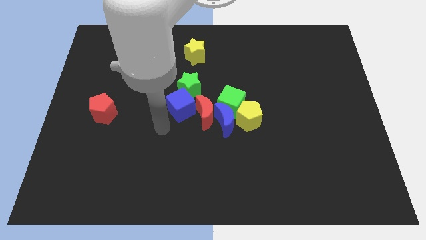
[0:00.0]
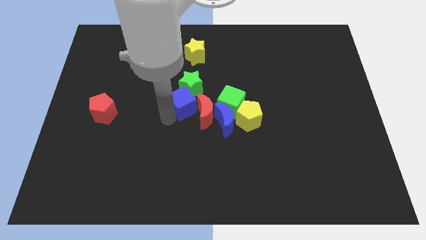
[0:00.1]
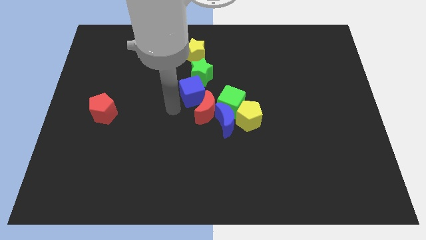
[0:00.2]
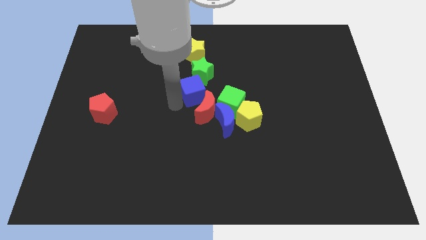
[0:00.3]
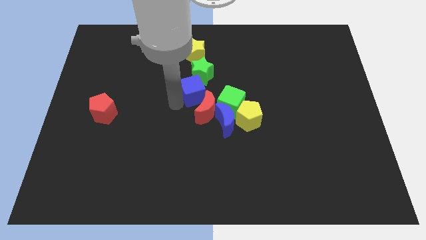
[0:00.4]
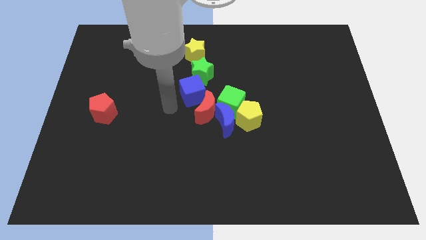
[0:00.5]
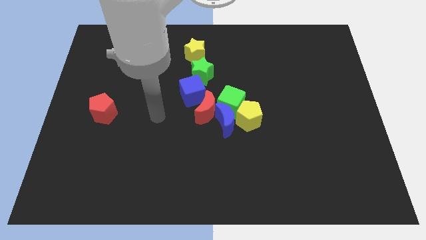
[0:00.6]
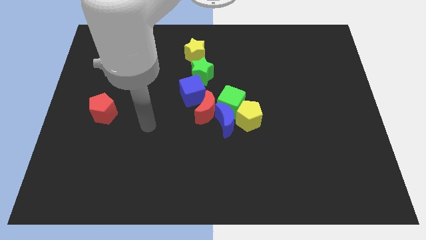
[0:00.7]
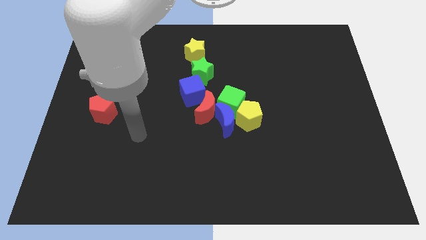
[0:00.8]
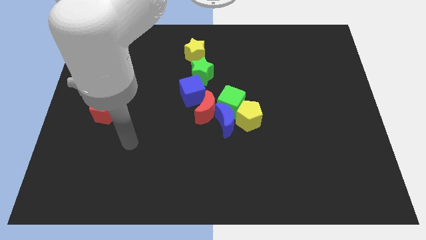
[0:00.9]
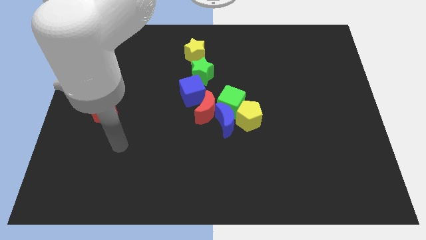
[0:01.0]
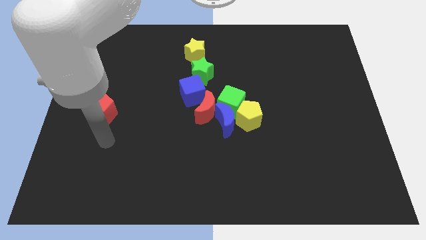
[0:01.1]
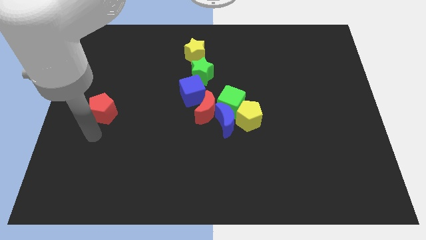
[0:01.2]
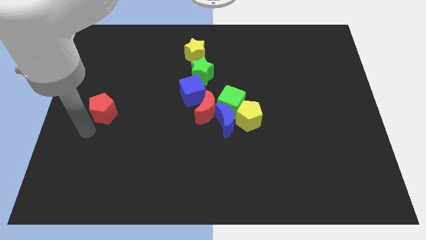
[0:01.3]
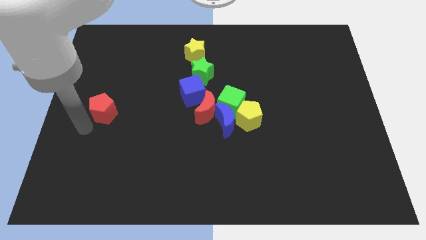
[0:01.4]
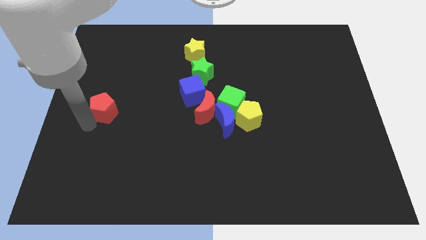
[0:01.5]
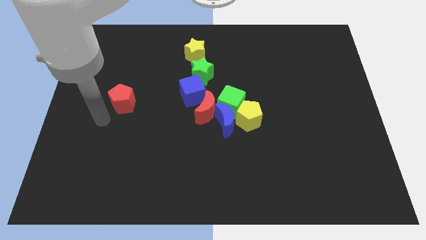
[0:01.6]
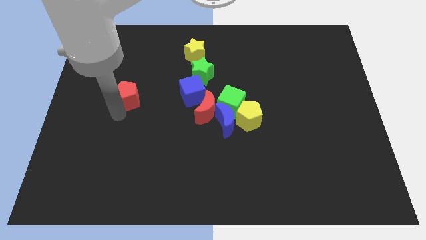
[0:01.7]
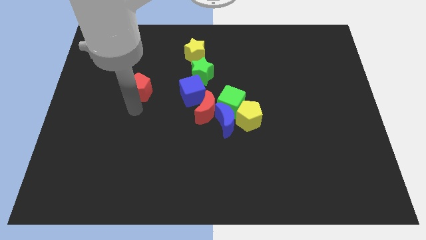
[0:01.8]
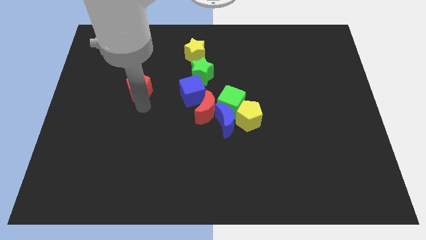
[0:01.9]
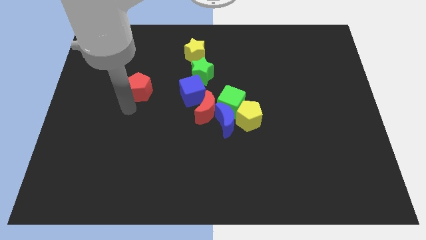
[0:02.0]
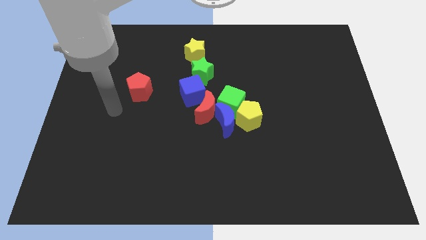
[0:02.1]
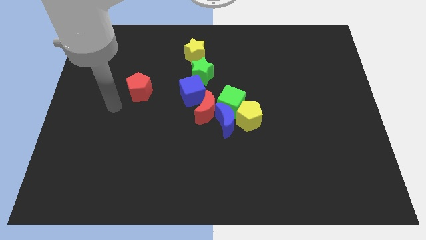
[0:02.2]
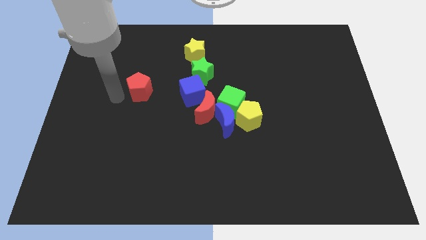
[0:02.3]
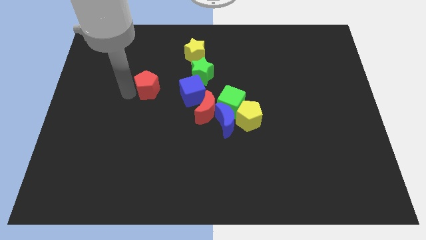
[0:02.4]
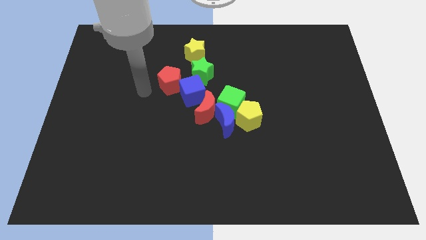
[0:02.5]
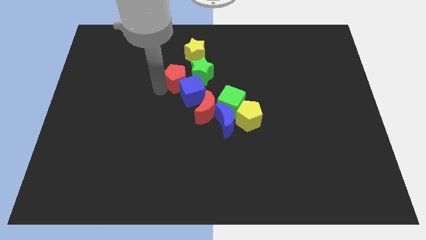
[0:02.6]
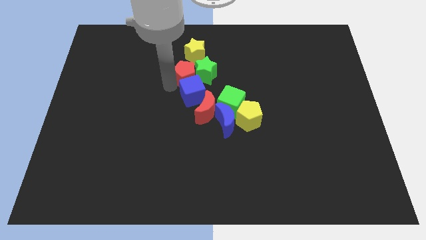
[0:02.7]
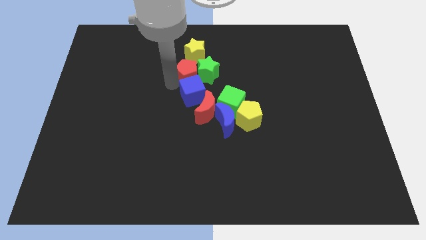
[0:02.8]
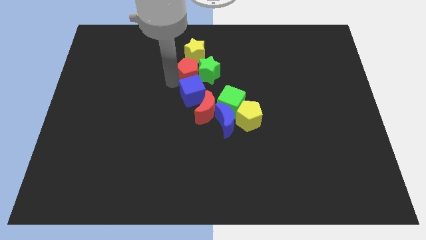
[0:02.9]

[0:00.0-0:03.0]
push red pentagon to the left of green star

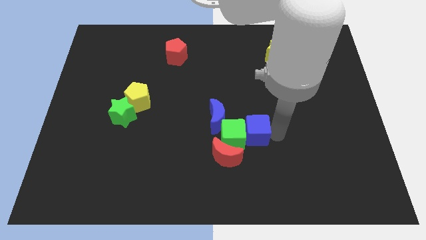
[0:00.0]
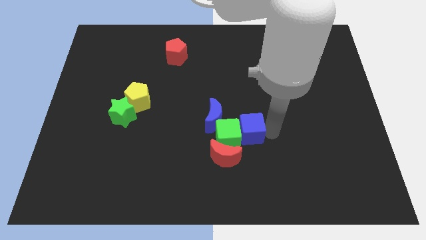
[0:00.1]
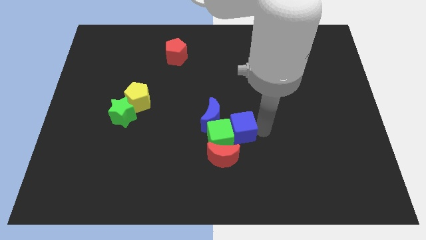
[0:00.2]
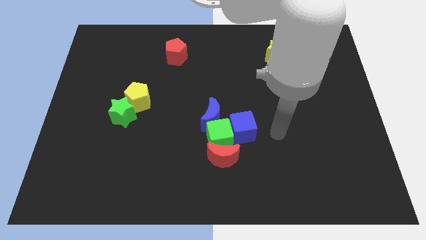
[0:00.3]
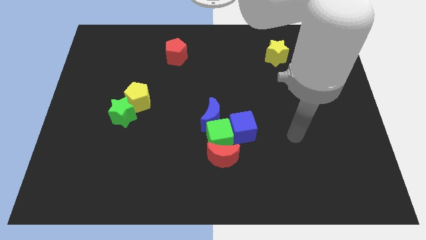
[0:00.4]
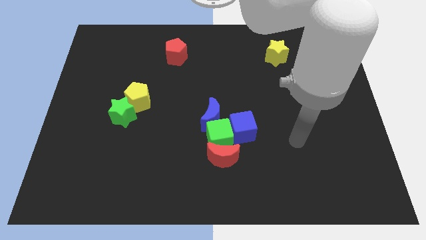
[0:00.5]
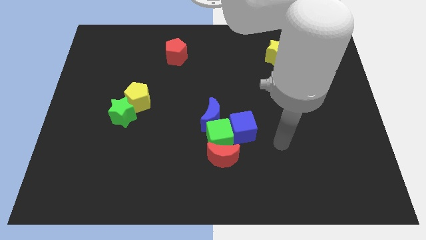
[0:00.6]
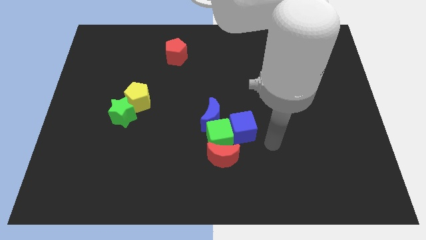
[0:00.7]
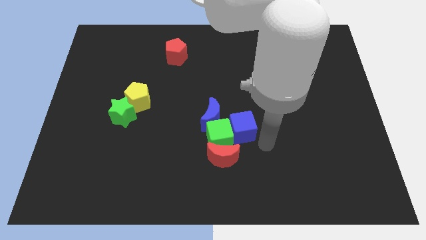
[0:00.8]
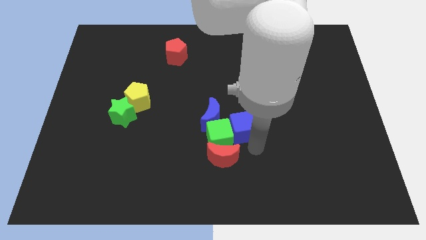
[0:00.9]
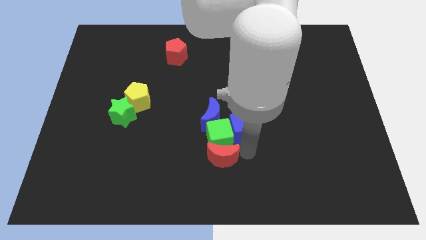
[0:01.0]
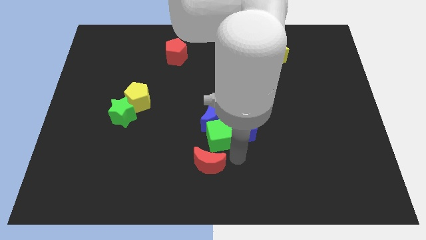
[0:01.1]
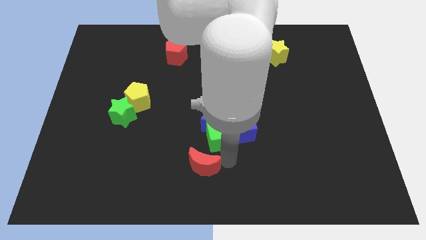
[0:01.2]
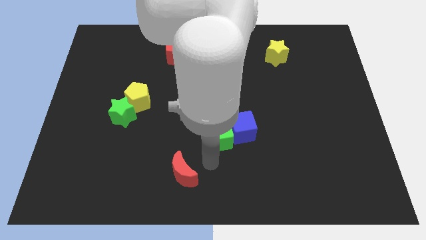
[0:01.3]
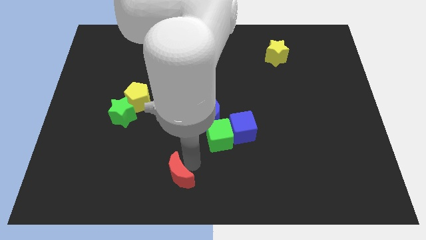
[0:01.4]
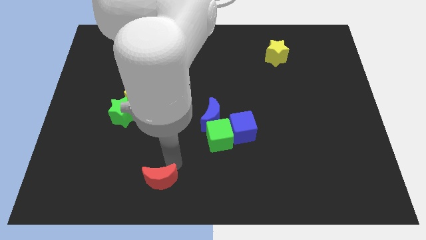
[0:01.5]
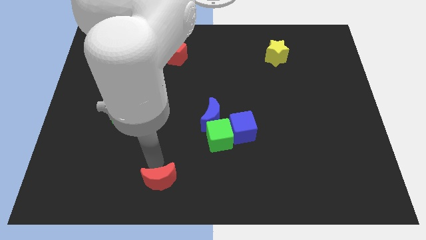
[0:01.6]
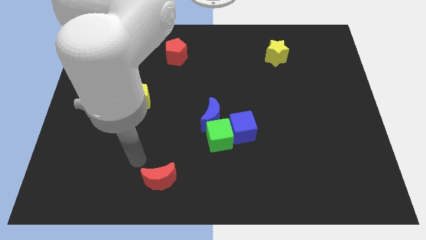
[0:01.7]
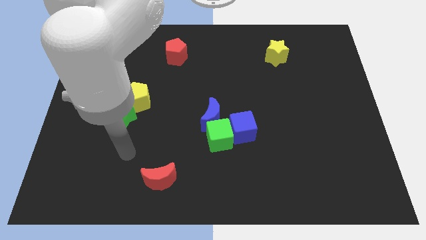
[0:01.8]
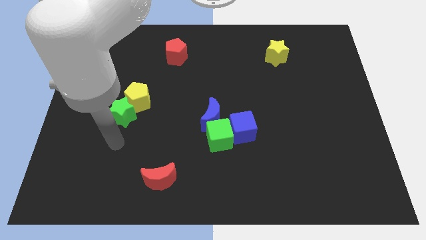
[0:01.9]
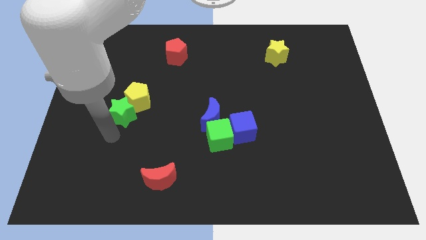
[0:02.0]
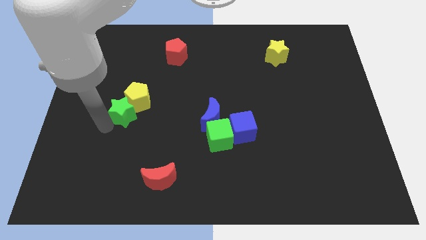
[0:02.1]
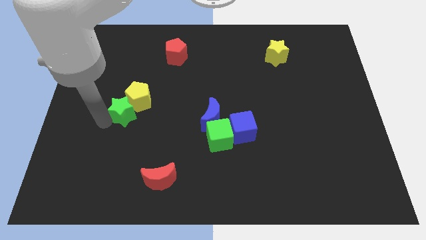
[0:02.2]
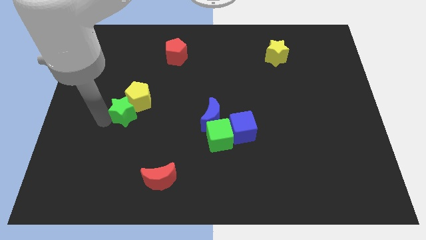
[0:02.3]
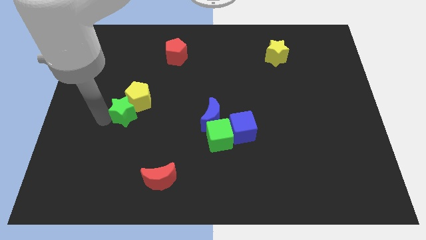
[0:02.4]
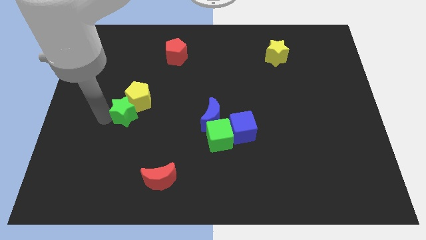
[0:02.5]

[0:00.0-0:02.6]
separate the red moon from the group of blocks

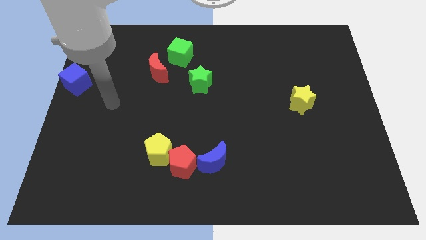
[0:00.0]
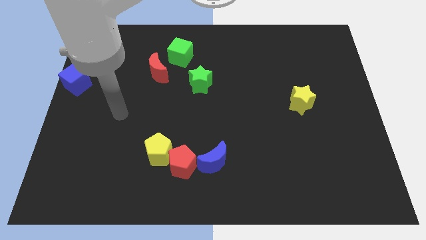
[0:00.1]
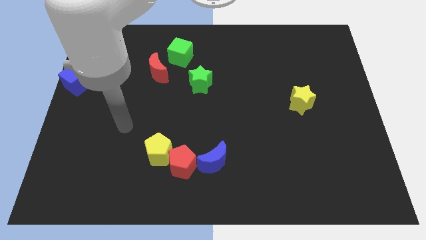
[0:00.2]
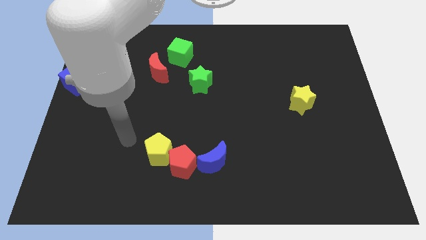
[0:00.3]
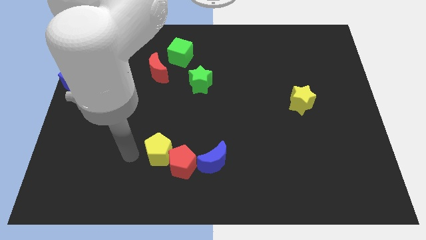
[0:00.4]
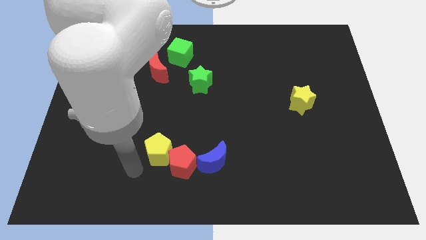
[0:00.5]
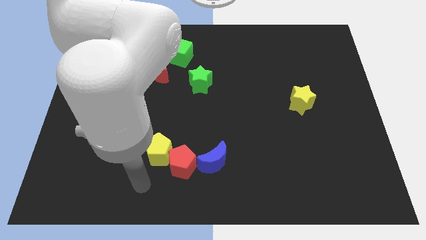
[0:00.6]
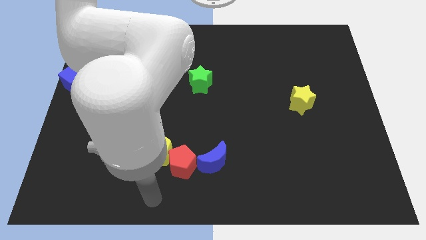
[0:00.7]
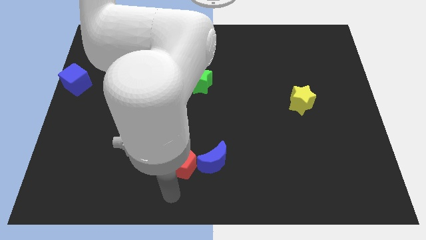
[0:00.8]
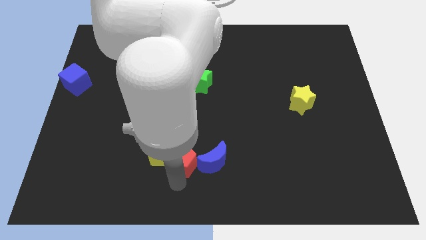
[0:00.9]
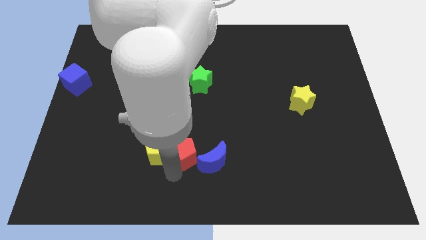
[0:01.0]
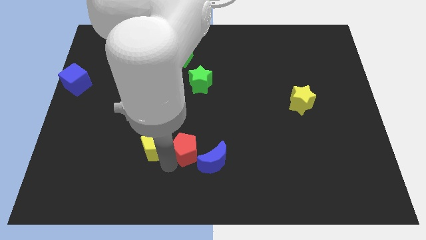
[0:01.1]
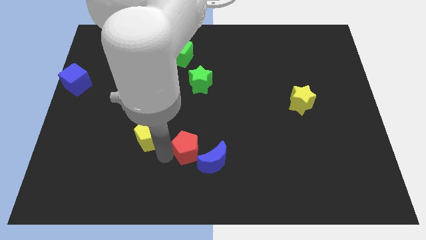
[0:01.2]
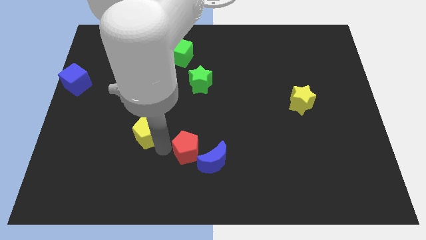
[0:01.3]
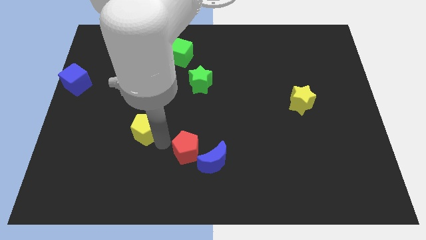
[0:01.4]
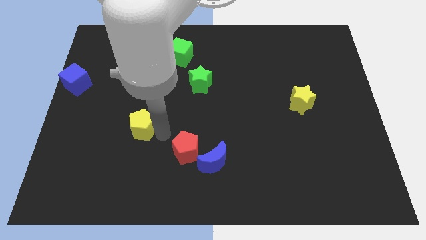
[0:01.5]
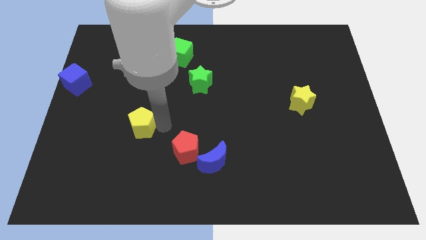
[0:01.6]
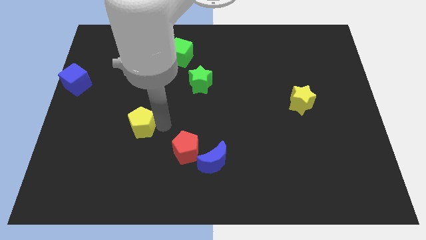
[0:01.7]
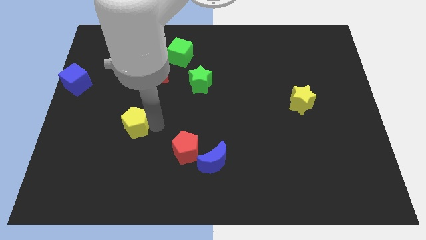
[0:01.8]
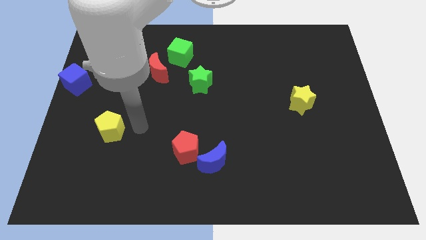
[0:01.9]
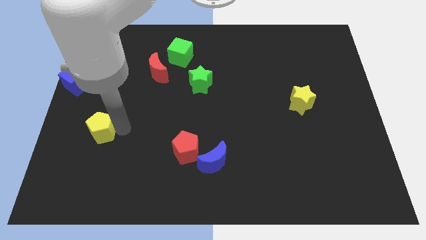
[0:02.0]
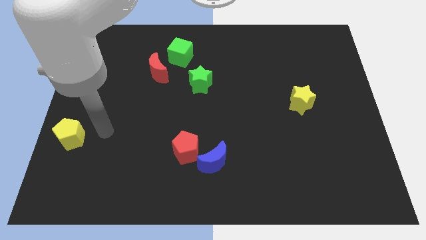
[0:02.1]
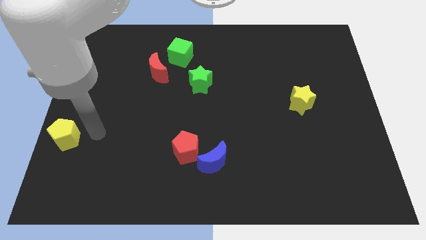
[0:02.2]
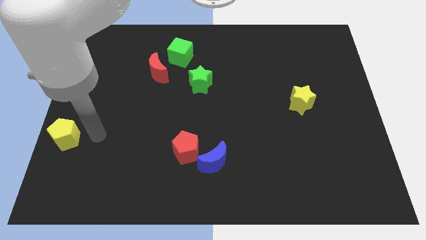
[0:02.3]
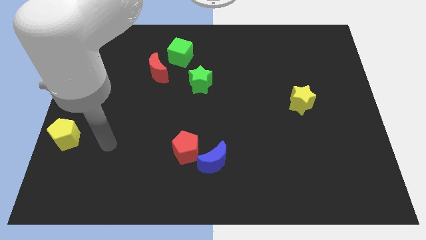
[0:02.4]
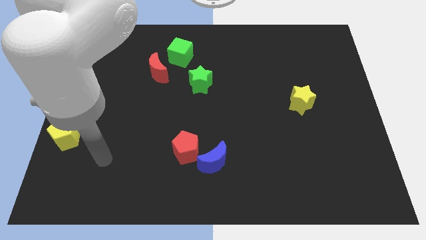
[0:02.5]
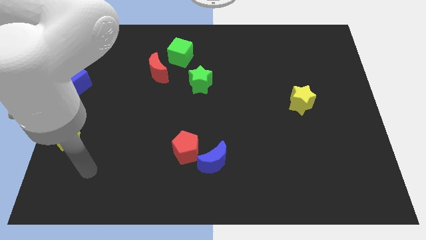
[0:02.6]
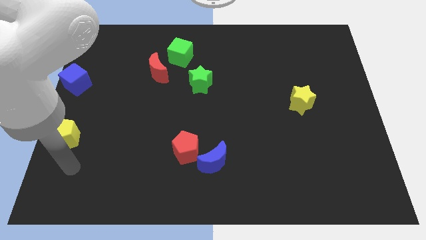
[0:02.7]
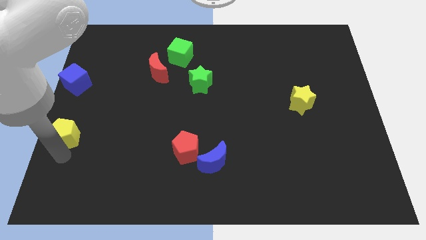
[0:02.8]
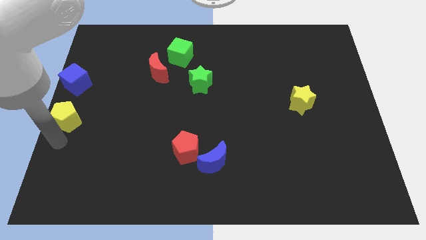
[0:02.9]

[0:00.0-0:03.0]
place the yellow pentagon at the bottom of the blue cube

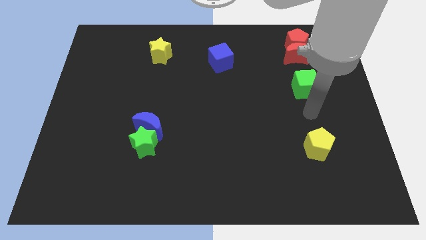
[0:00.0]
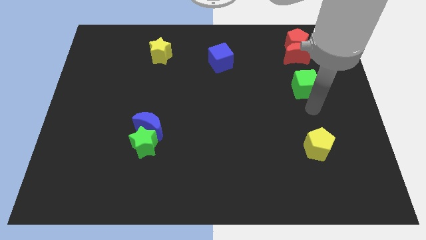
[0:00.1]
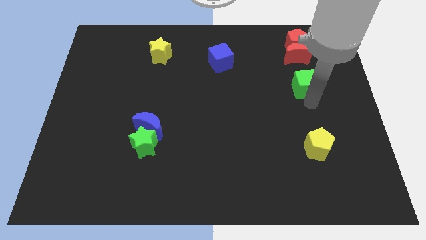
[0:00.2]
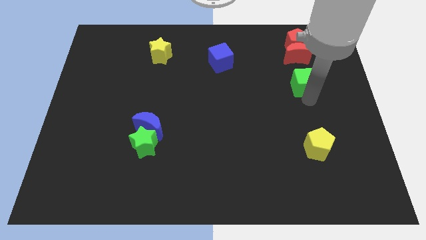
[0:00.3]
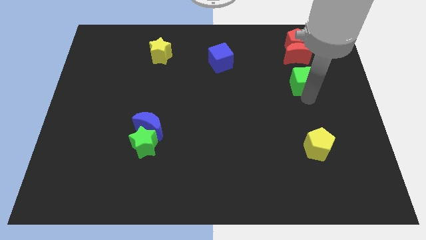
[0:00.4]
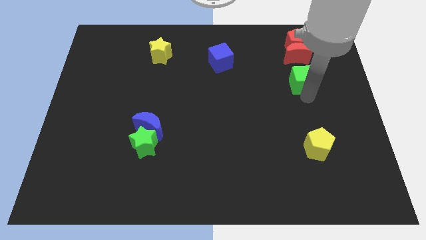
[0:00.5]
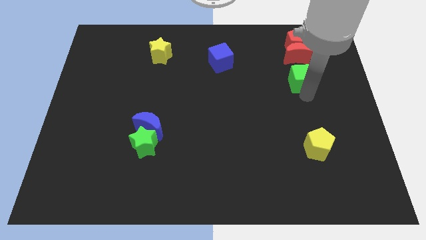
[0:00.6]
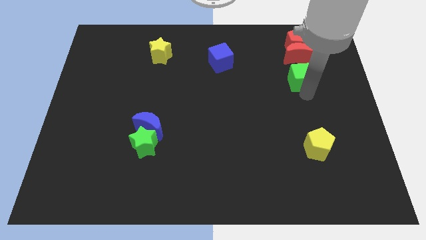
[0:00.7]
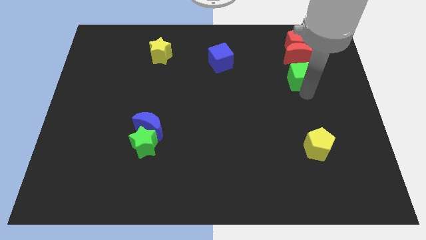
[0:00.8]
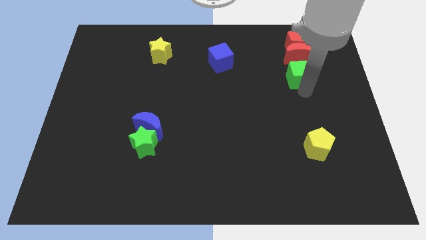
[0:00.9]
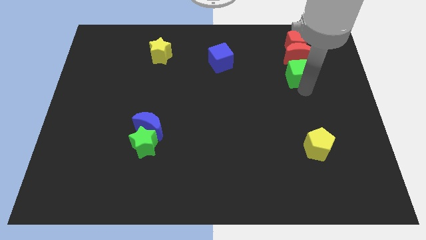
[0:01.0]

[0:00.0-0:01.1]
move green cube slightly upwards
